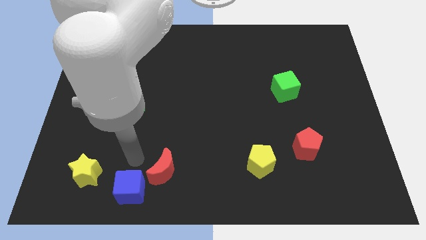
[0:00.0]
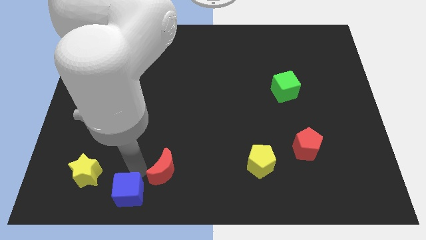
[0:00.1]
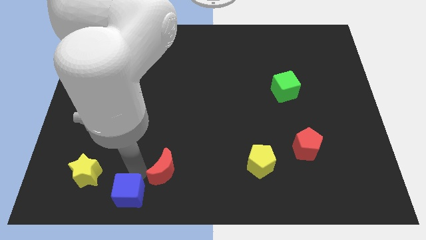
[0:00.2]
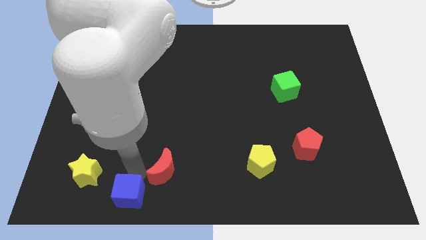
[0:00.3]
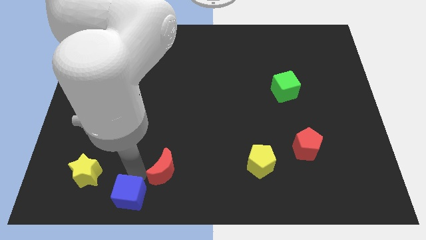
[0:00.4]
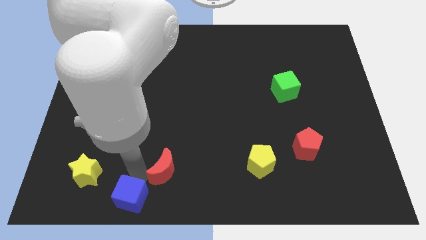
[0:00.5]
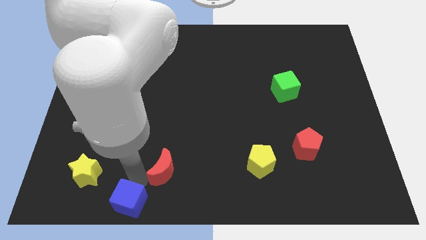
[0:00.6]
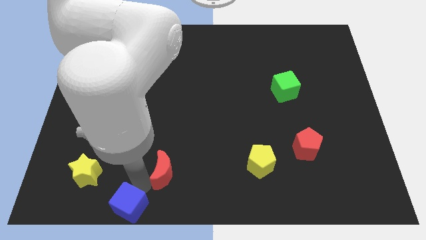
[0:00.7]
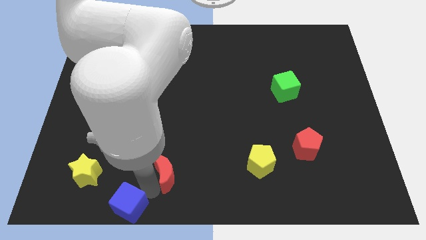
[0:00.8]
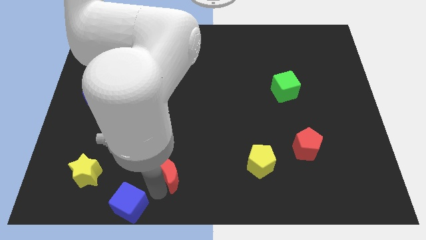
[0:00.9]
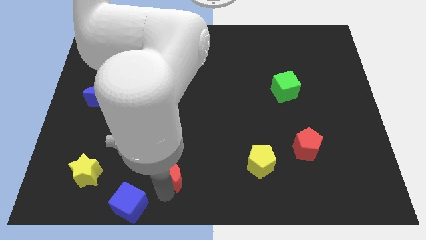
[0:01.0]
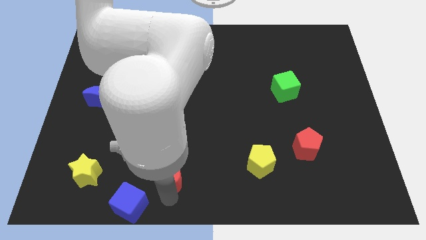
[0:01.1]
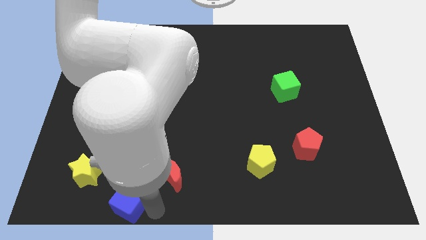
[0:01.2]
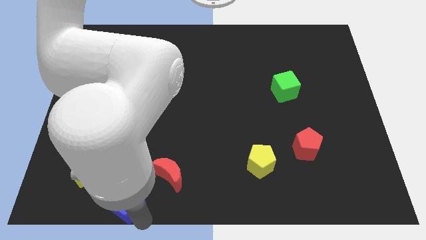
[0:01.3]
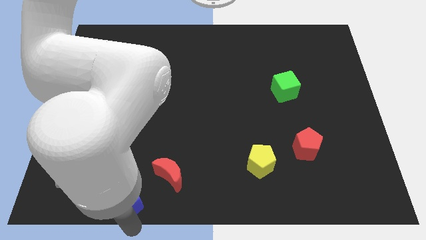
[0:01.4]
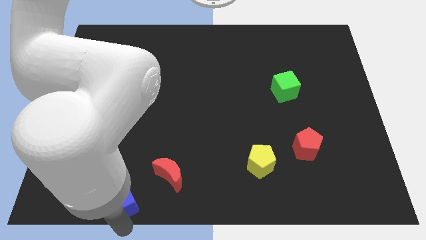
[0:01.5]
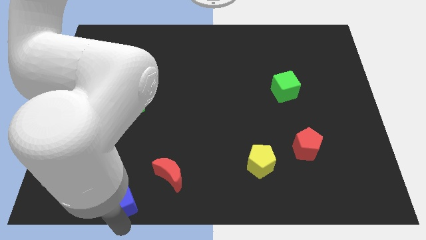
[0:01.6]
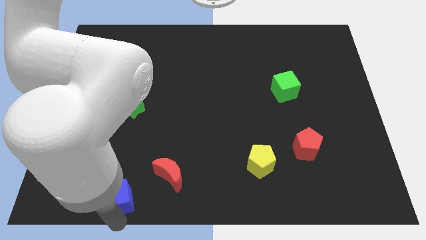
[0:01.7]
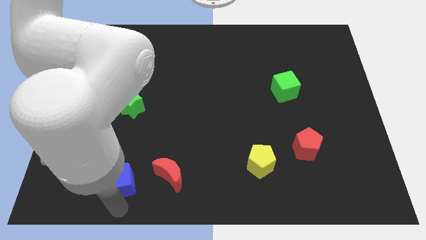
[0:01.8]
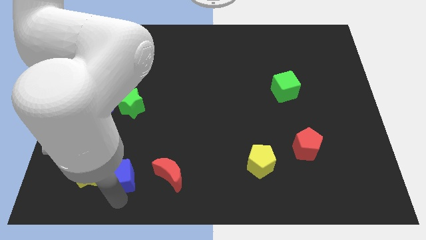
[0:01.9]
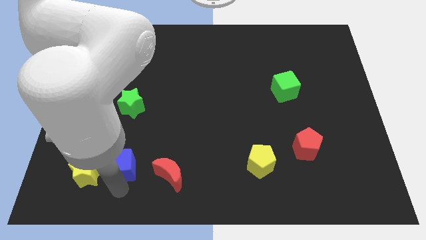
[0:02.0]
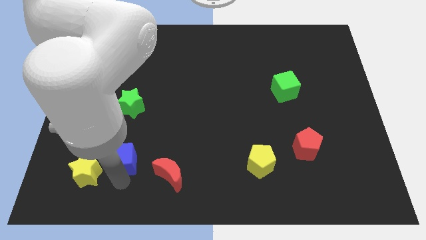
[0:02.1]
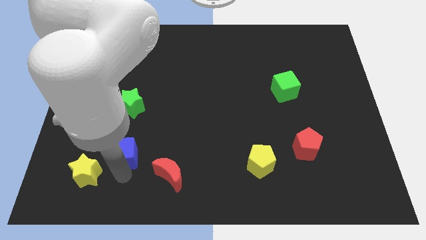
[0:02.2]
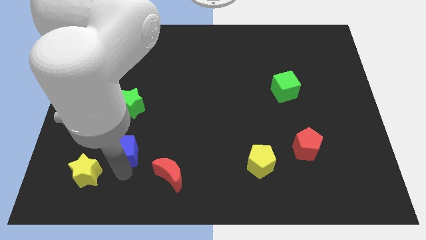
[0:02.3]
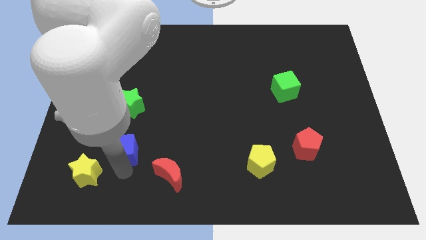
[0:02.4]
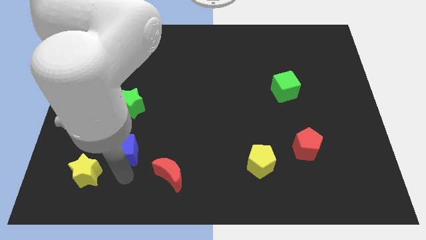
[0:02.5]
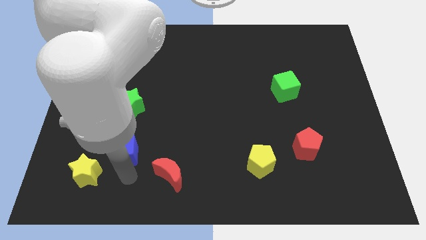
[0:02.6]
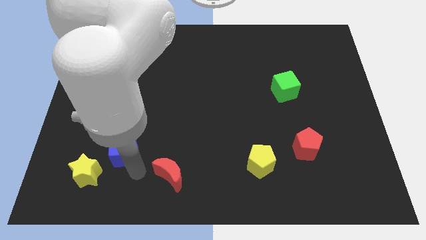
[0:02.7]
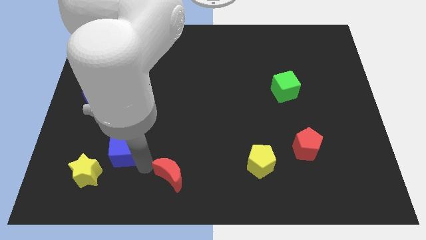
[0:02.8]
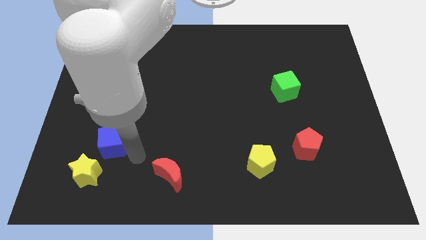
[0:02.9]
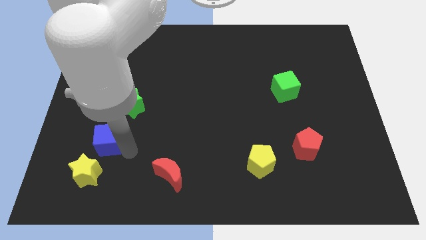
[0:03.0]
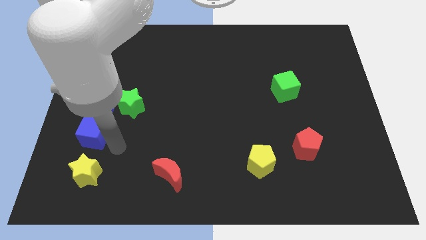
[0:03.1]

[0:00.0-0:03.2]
push blue cube in between green star and yellow star

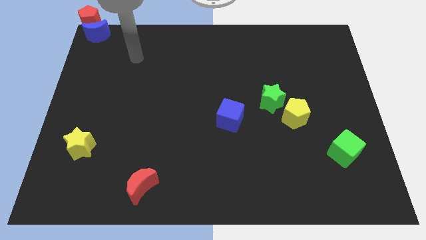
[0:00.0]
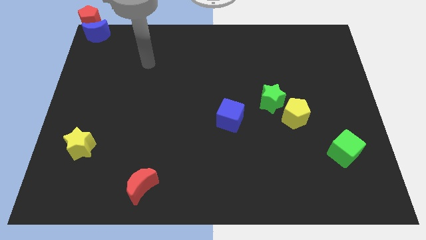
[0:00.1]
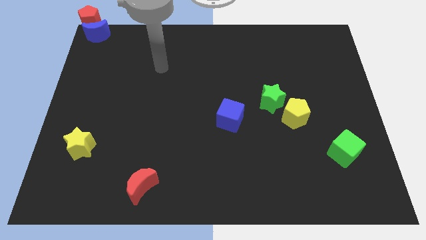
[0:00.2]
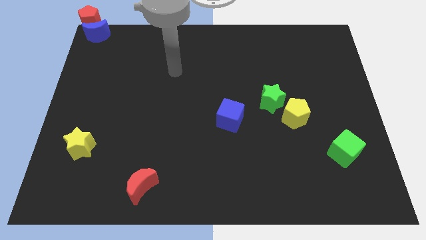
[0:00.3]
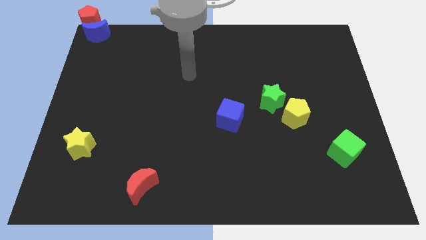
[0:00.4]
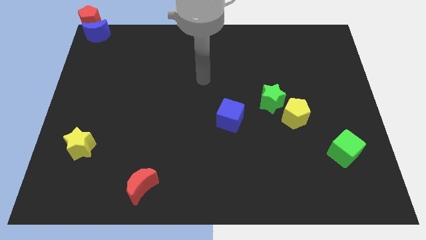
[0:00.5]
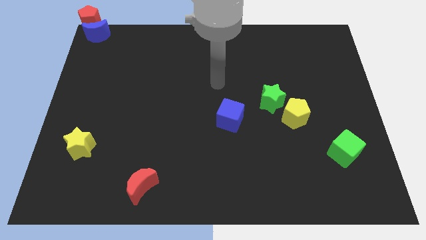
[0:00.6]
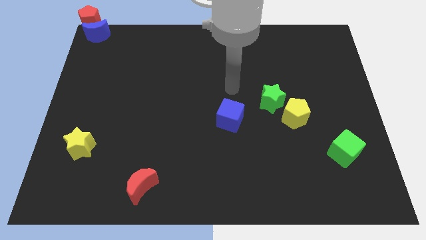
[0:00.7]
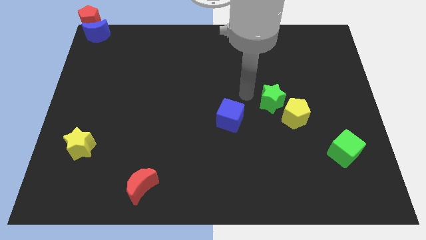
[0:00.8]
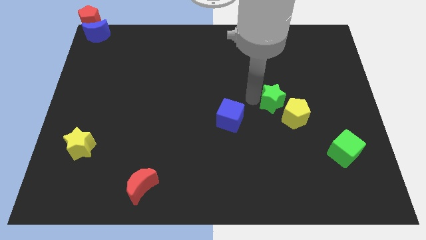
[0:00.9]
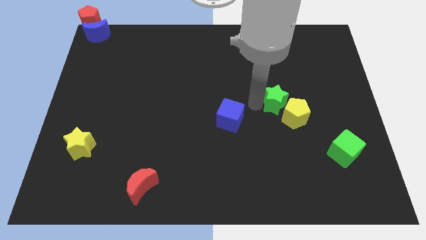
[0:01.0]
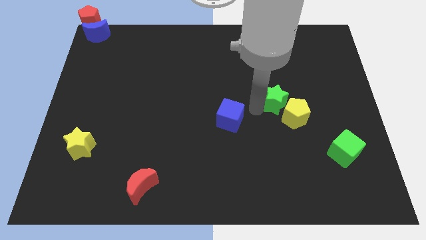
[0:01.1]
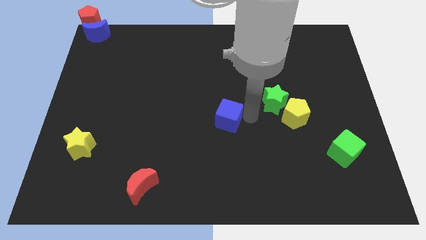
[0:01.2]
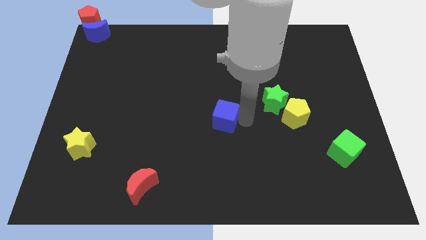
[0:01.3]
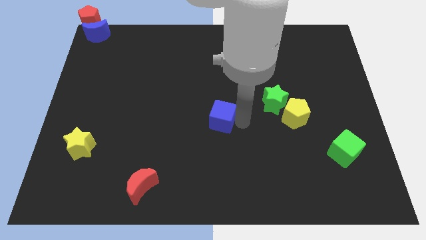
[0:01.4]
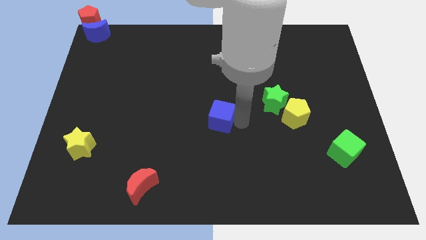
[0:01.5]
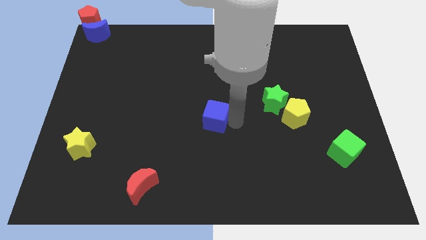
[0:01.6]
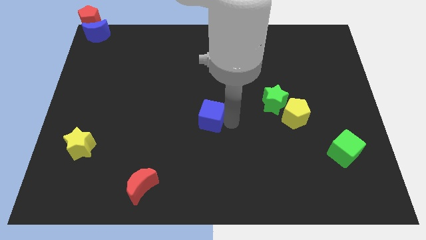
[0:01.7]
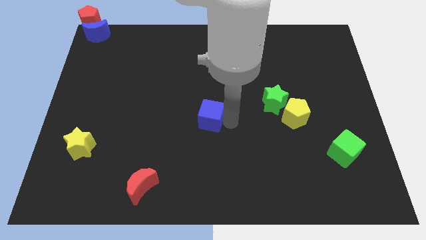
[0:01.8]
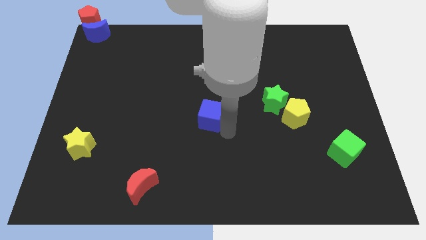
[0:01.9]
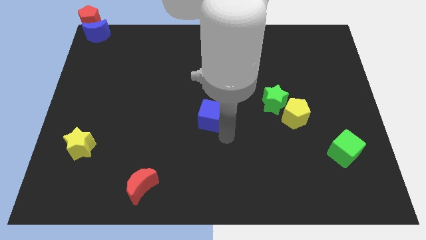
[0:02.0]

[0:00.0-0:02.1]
move the blue cube diagonally on the top right side of the red crescent

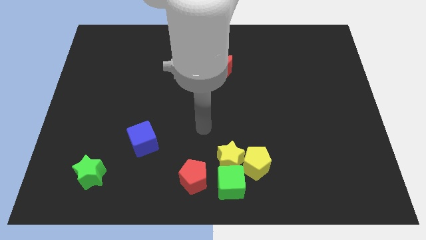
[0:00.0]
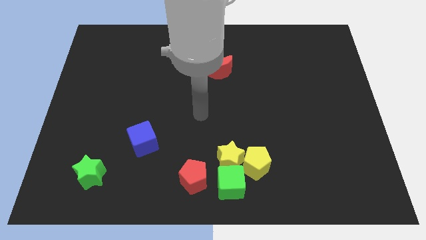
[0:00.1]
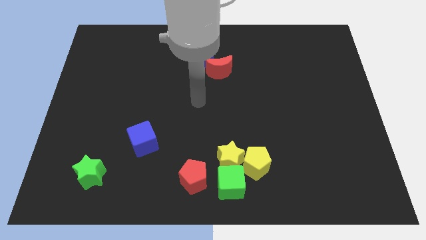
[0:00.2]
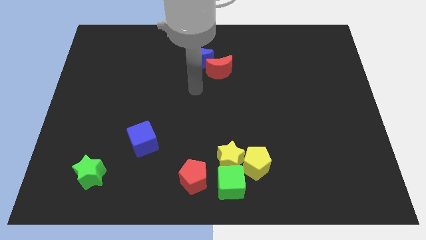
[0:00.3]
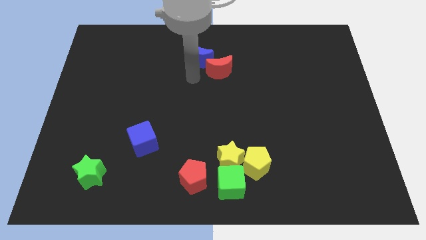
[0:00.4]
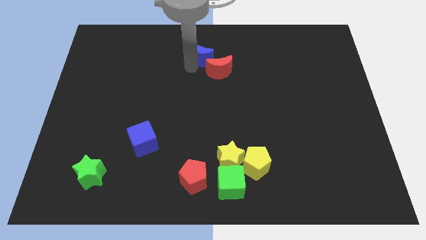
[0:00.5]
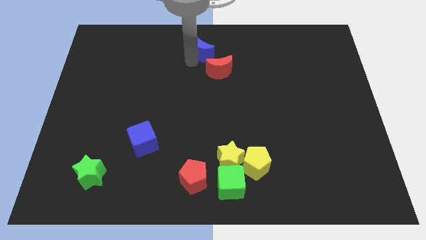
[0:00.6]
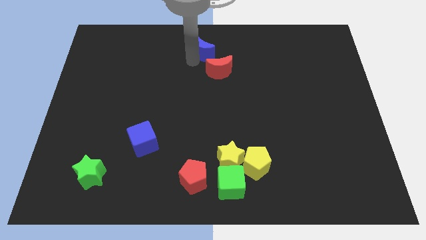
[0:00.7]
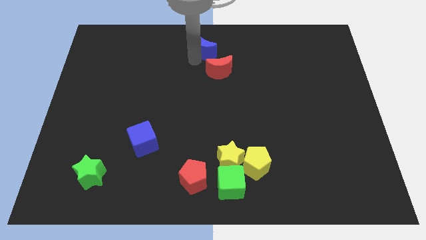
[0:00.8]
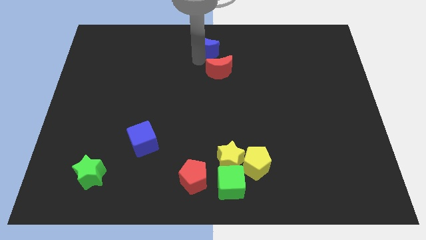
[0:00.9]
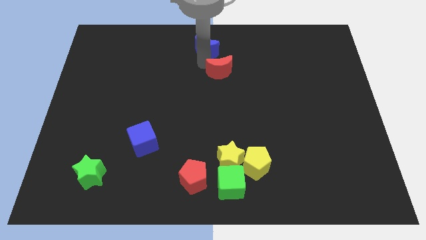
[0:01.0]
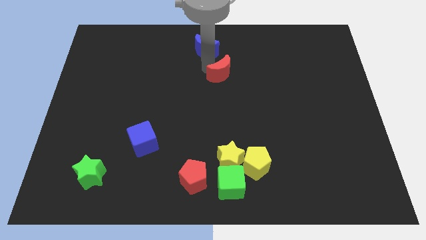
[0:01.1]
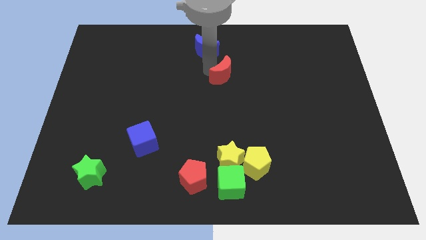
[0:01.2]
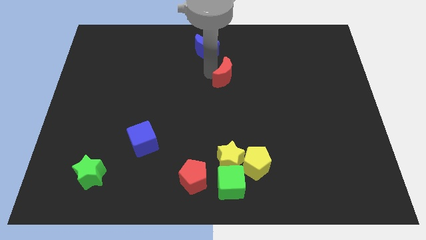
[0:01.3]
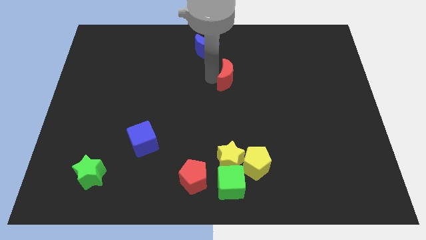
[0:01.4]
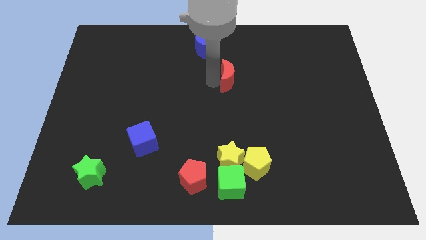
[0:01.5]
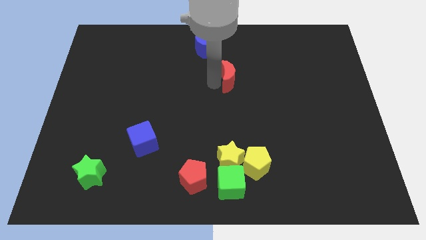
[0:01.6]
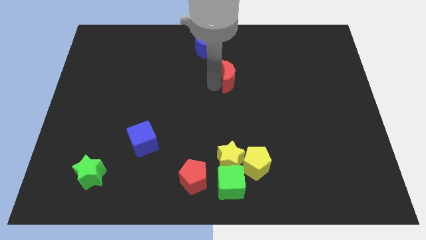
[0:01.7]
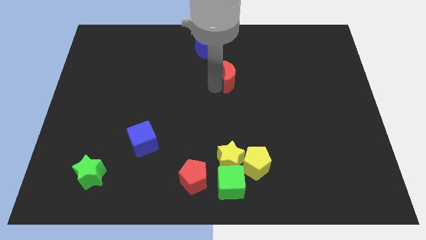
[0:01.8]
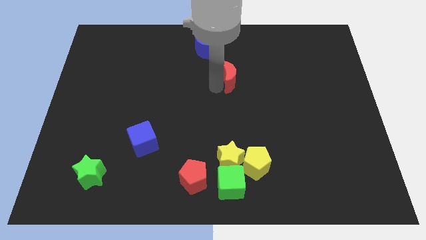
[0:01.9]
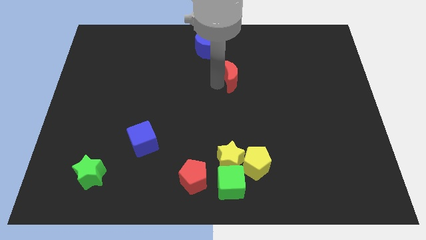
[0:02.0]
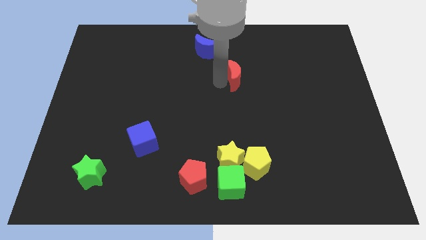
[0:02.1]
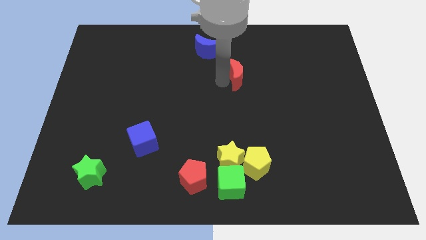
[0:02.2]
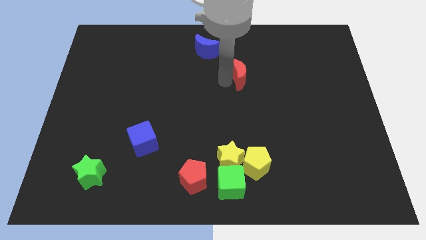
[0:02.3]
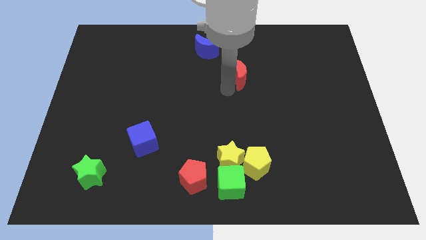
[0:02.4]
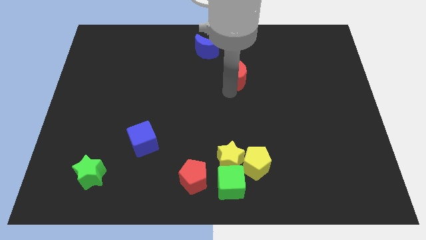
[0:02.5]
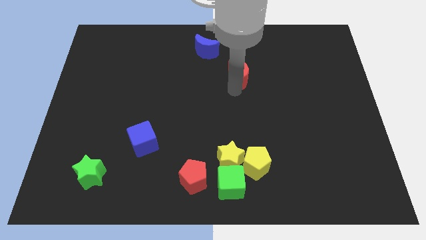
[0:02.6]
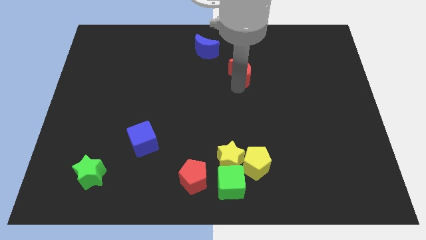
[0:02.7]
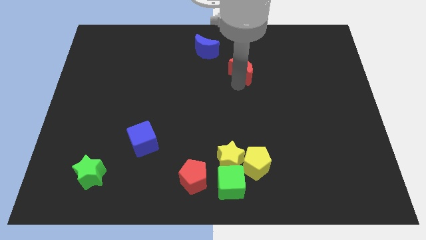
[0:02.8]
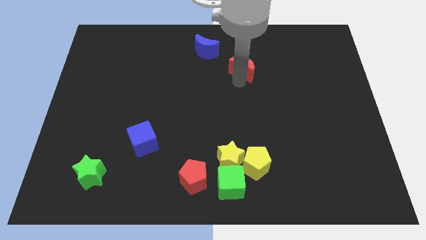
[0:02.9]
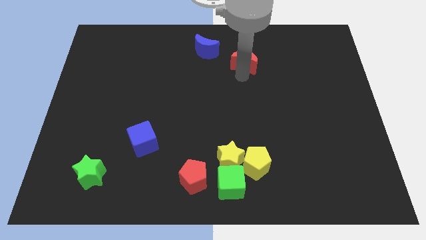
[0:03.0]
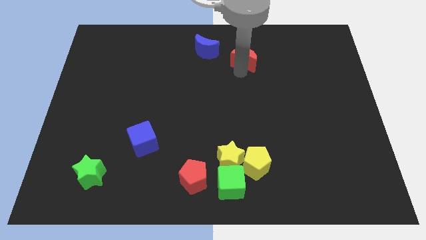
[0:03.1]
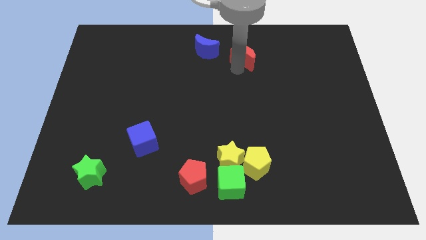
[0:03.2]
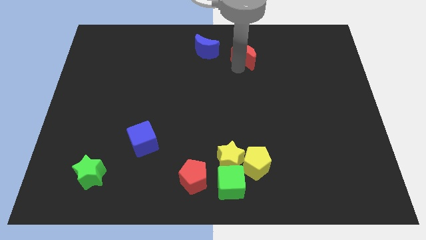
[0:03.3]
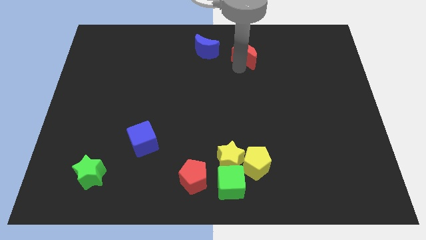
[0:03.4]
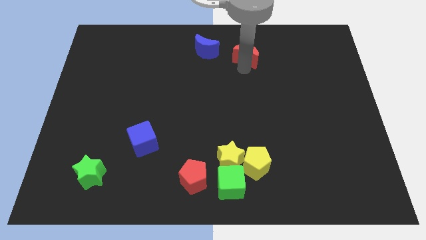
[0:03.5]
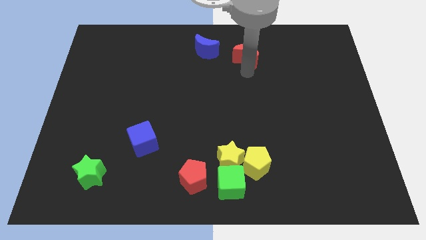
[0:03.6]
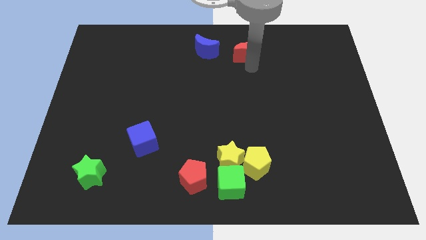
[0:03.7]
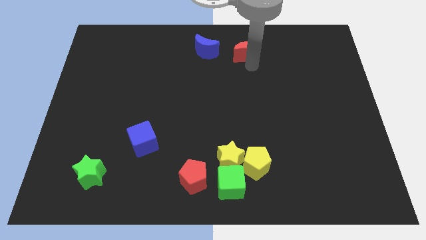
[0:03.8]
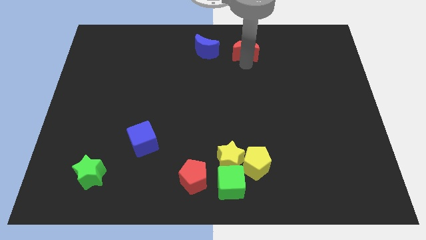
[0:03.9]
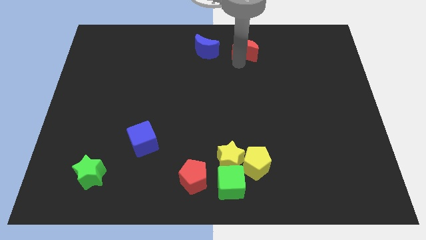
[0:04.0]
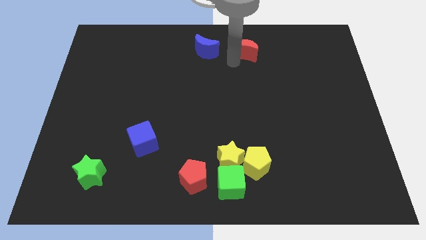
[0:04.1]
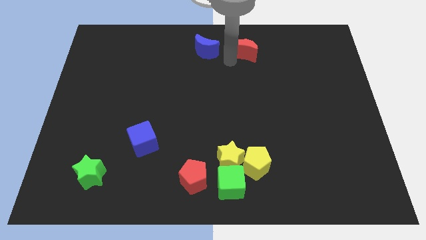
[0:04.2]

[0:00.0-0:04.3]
separate the red moon from the blue moon
